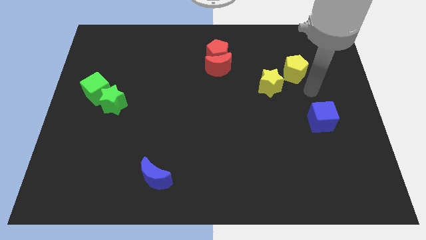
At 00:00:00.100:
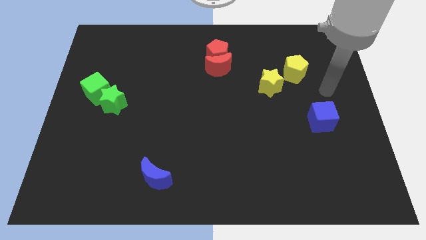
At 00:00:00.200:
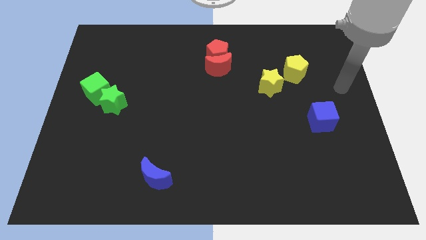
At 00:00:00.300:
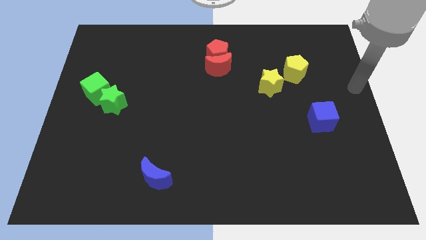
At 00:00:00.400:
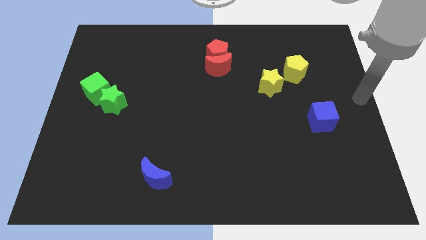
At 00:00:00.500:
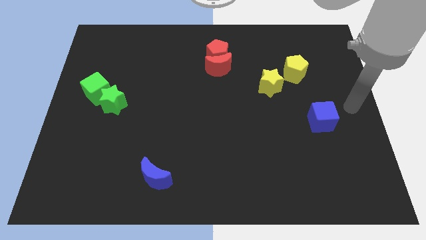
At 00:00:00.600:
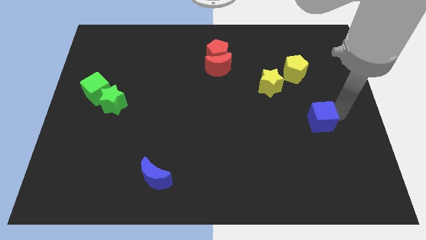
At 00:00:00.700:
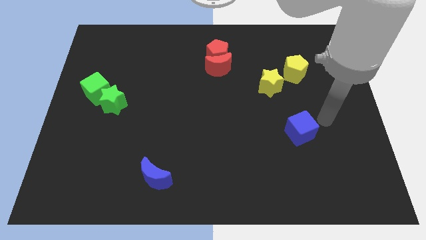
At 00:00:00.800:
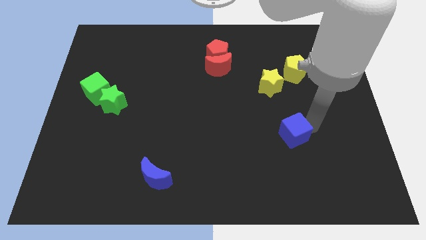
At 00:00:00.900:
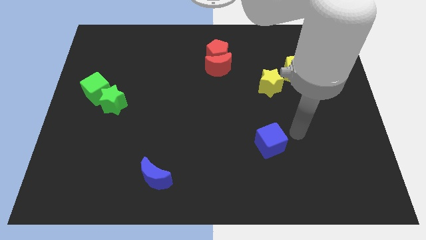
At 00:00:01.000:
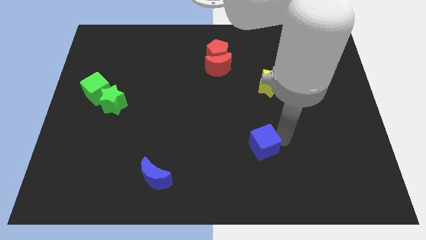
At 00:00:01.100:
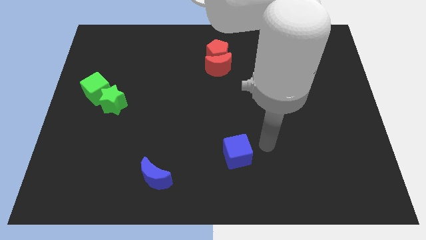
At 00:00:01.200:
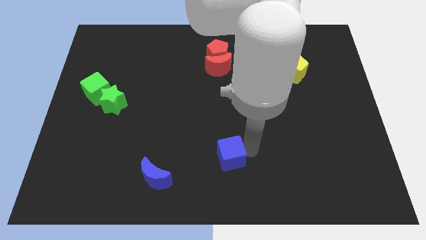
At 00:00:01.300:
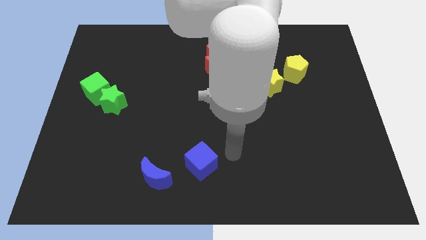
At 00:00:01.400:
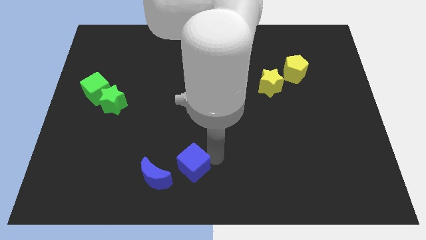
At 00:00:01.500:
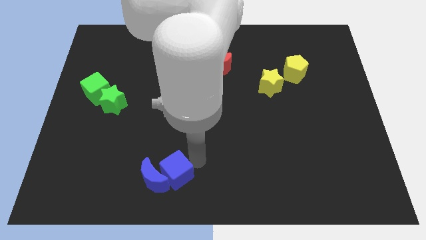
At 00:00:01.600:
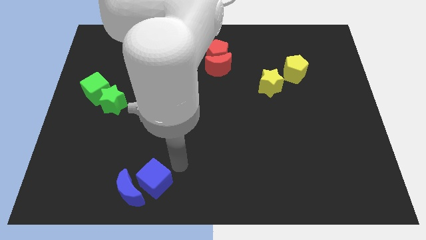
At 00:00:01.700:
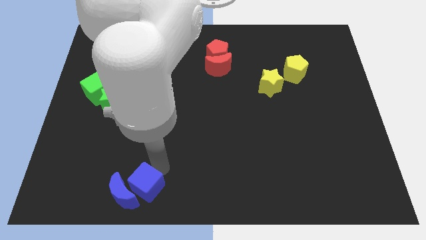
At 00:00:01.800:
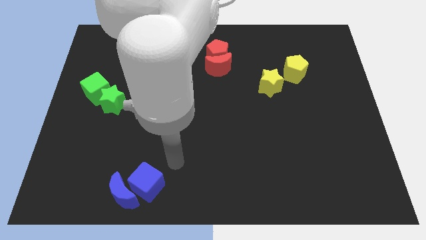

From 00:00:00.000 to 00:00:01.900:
move the blue cube into the blue crescent

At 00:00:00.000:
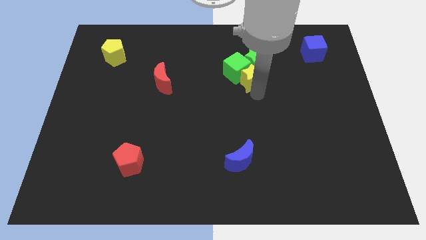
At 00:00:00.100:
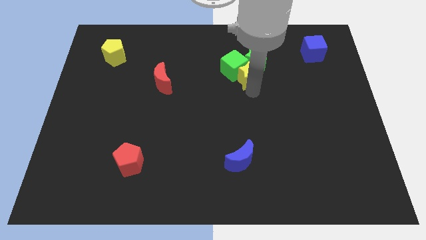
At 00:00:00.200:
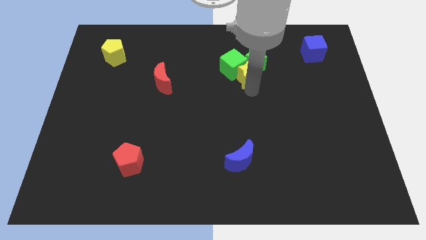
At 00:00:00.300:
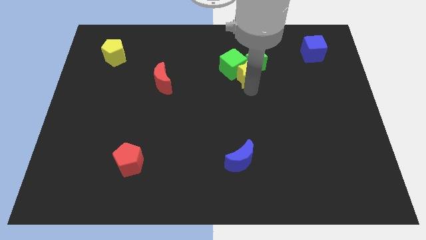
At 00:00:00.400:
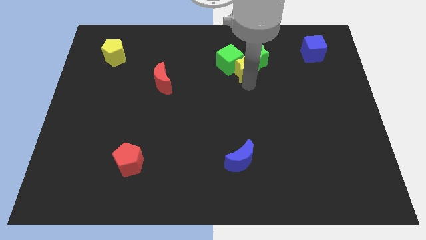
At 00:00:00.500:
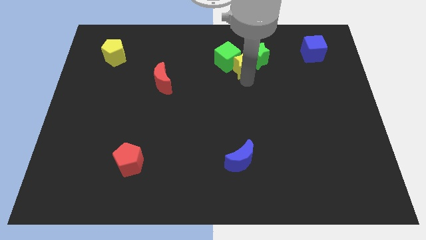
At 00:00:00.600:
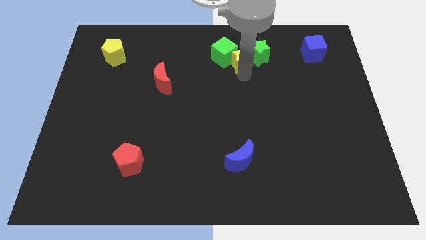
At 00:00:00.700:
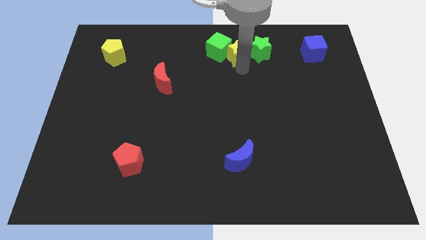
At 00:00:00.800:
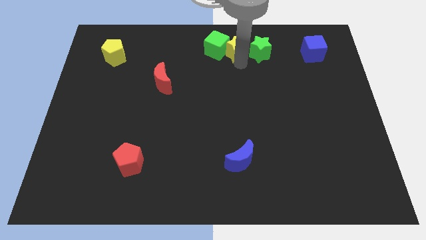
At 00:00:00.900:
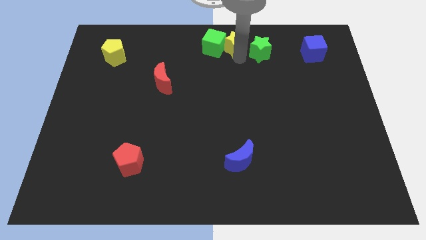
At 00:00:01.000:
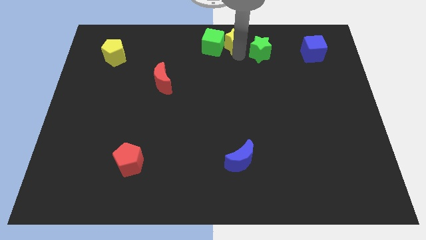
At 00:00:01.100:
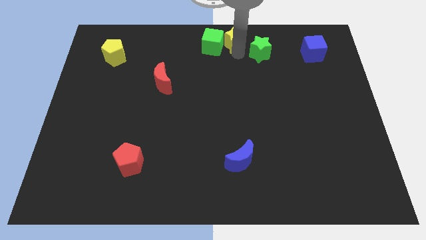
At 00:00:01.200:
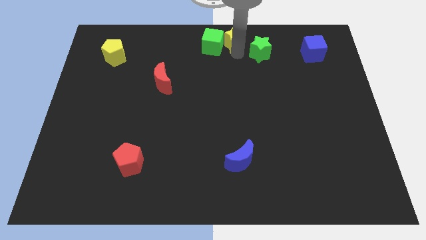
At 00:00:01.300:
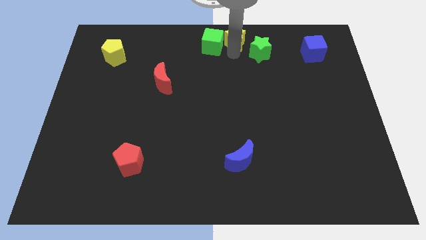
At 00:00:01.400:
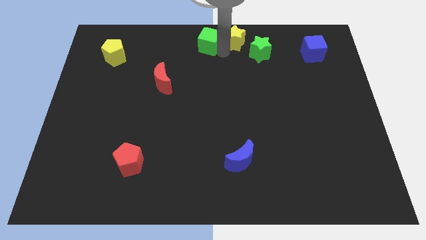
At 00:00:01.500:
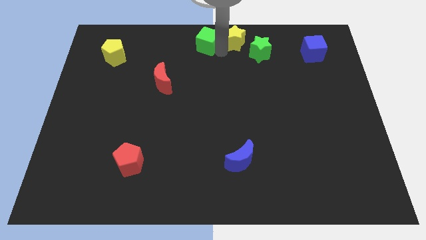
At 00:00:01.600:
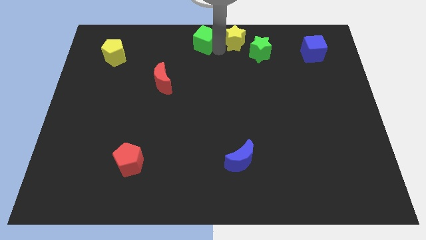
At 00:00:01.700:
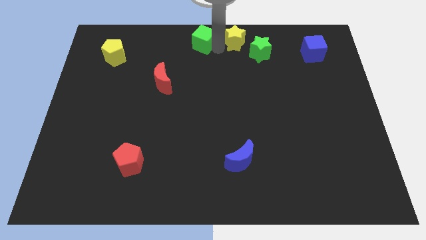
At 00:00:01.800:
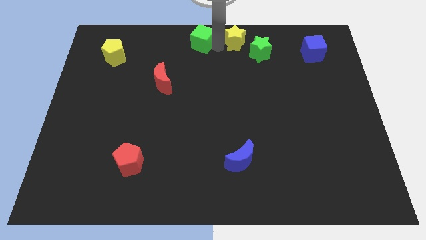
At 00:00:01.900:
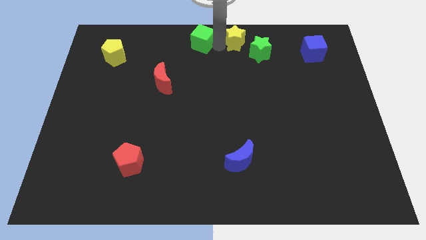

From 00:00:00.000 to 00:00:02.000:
place yellow star into the green cube and green star

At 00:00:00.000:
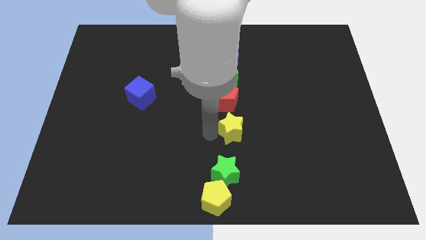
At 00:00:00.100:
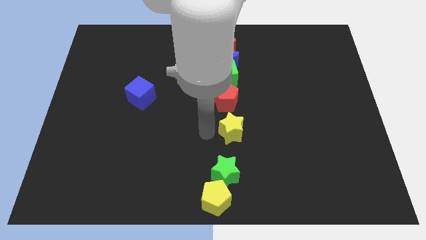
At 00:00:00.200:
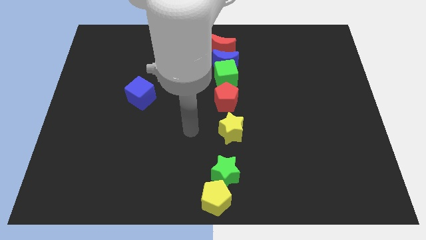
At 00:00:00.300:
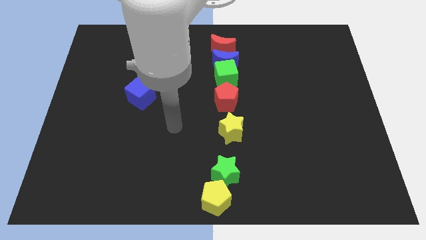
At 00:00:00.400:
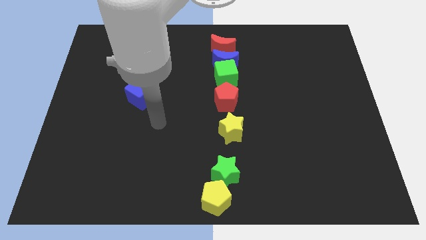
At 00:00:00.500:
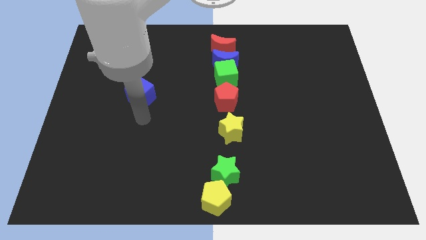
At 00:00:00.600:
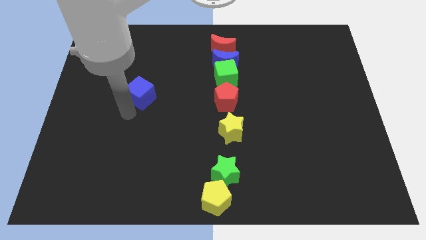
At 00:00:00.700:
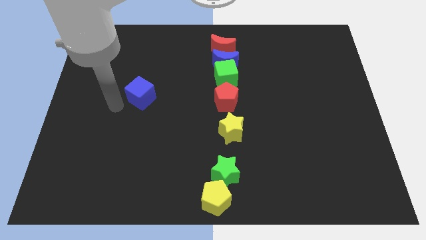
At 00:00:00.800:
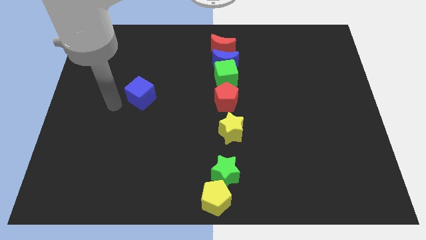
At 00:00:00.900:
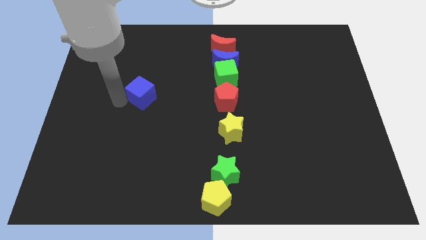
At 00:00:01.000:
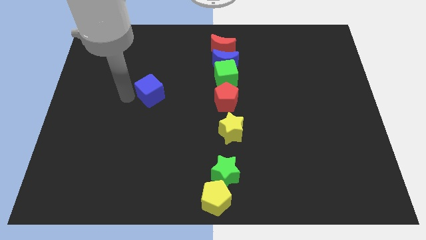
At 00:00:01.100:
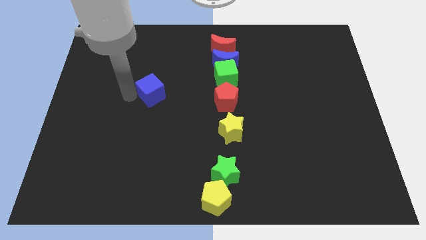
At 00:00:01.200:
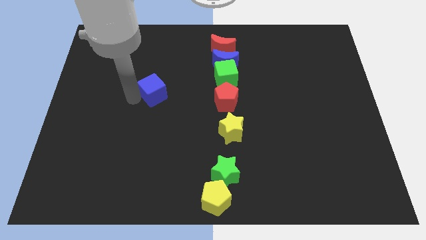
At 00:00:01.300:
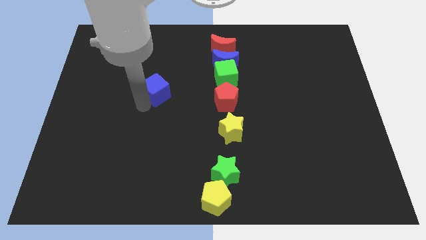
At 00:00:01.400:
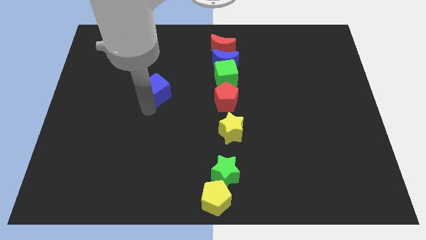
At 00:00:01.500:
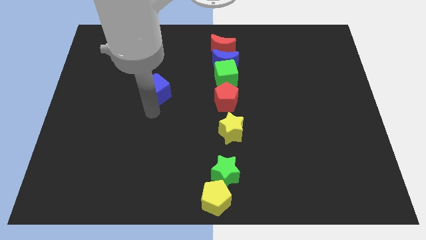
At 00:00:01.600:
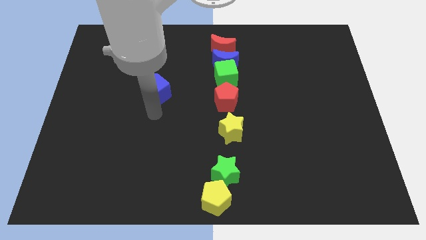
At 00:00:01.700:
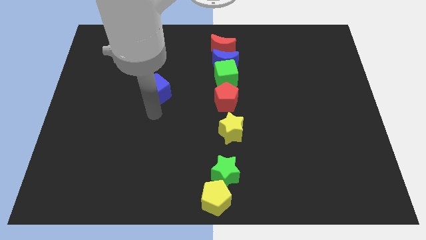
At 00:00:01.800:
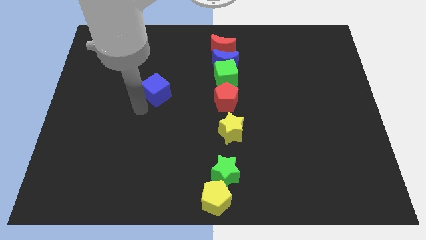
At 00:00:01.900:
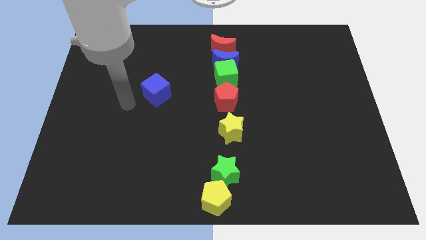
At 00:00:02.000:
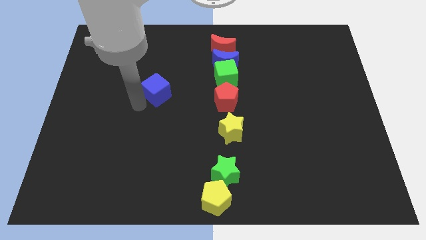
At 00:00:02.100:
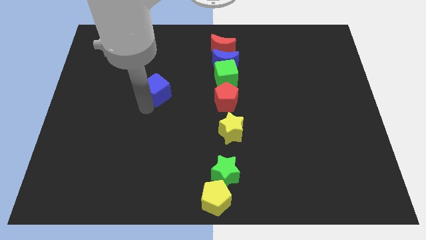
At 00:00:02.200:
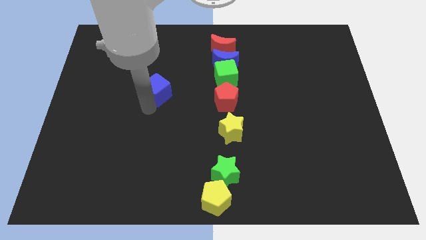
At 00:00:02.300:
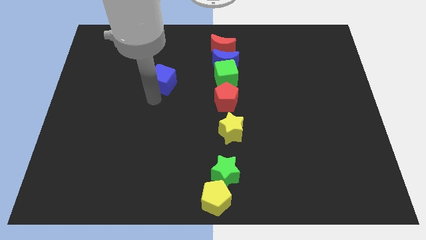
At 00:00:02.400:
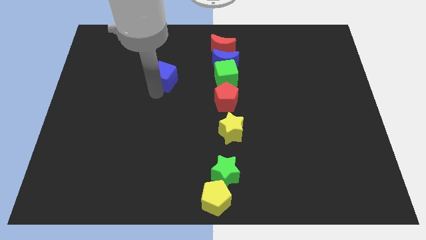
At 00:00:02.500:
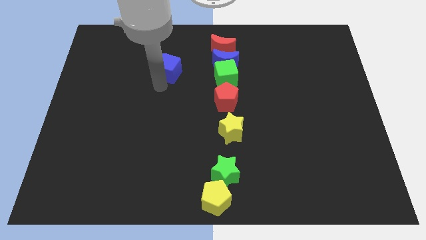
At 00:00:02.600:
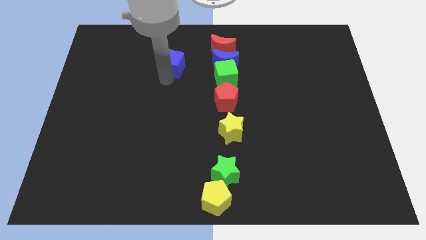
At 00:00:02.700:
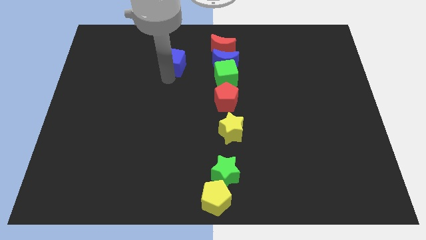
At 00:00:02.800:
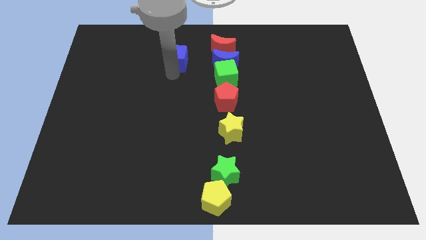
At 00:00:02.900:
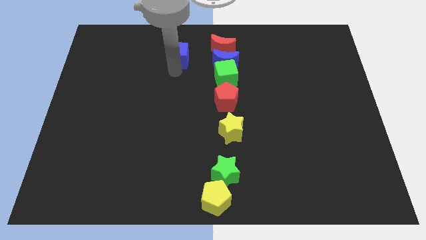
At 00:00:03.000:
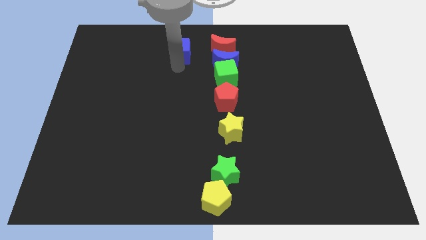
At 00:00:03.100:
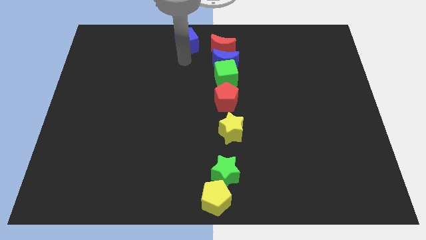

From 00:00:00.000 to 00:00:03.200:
place the blue cube left to the blue moon

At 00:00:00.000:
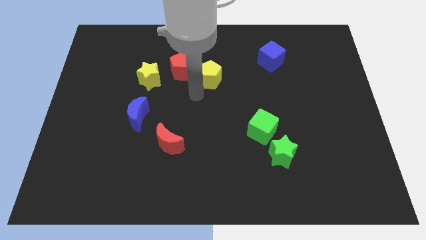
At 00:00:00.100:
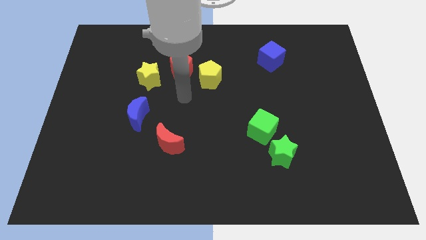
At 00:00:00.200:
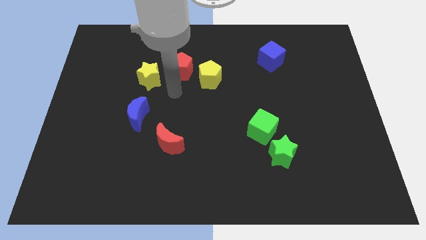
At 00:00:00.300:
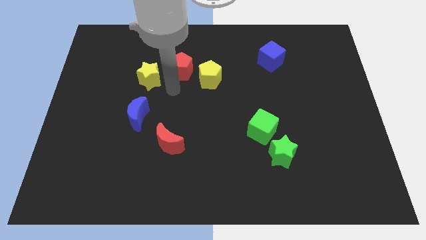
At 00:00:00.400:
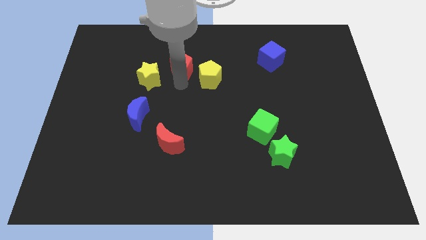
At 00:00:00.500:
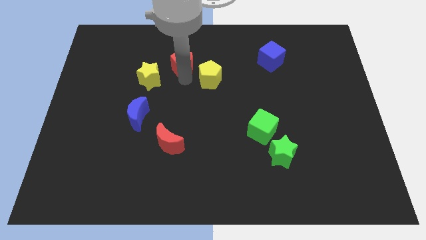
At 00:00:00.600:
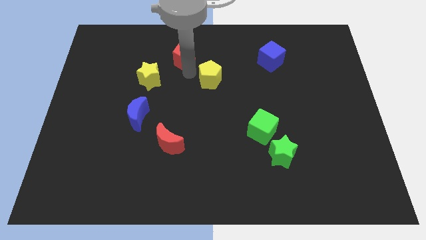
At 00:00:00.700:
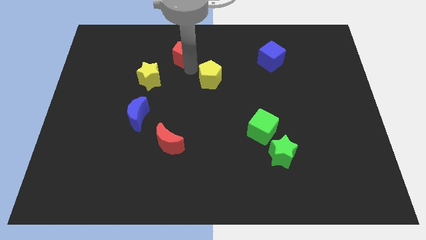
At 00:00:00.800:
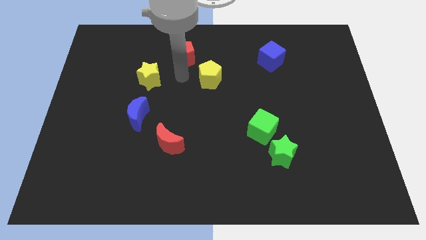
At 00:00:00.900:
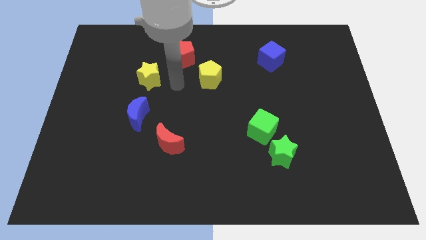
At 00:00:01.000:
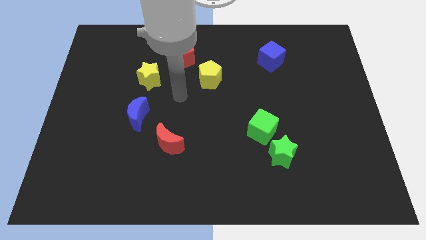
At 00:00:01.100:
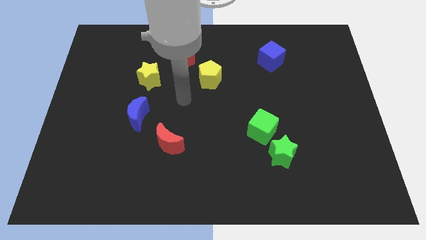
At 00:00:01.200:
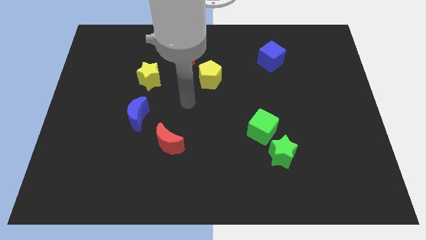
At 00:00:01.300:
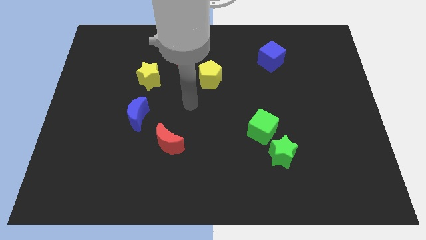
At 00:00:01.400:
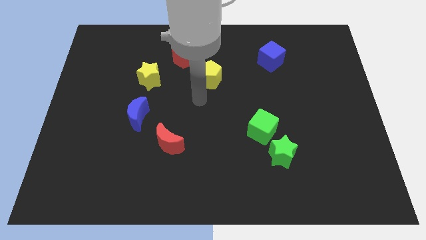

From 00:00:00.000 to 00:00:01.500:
push the red pentagon slightly upward

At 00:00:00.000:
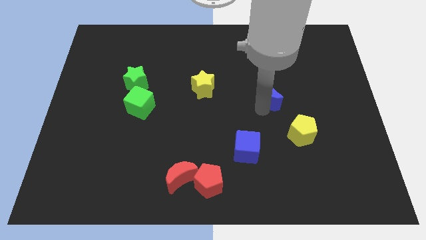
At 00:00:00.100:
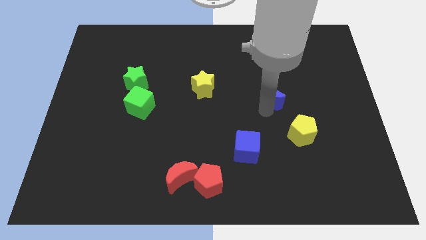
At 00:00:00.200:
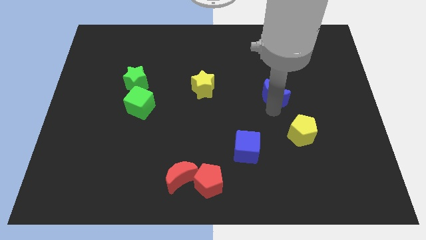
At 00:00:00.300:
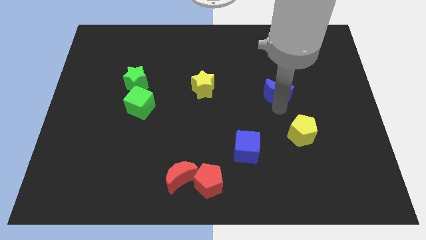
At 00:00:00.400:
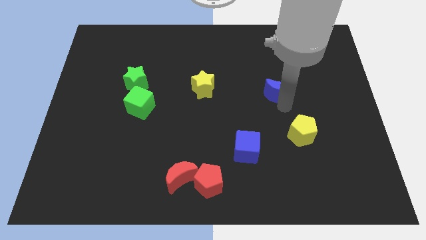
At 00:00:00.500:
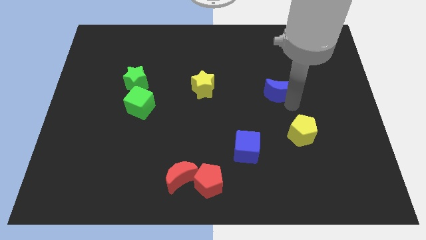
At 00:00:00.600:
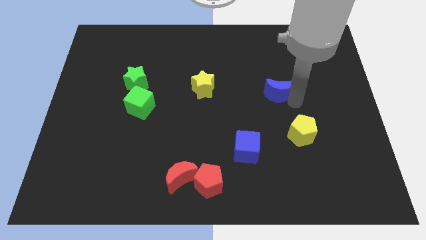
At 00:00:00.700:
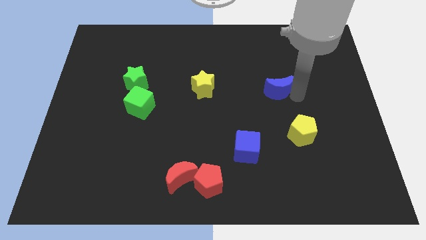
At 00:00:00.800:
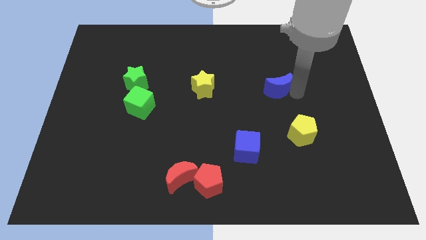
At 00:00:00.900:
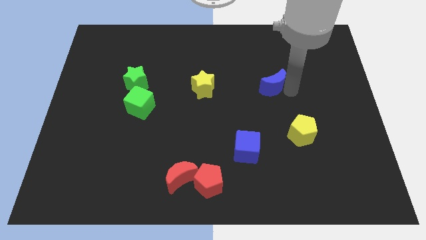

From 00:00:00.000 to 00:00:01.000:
place the blue crescent horizontally to the right side of the yellow star
